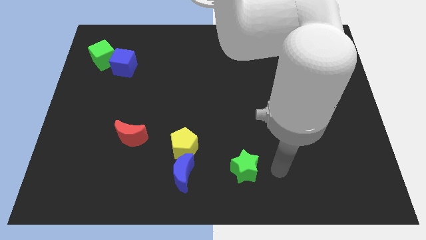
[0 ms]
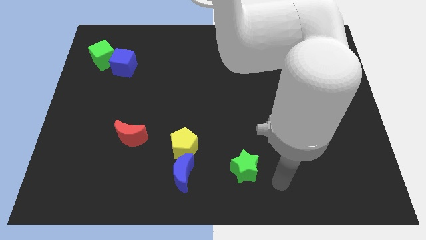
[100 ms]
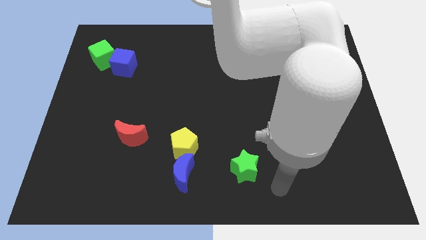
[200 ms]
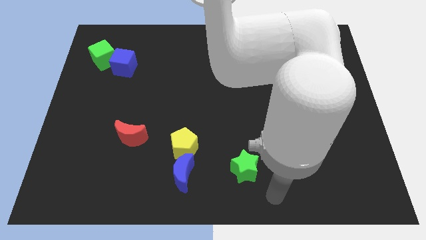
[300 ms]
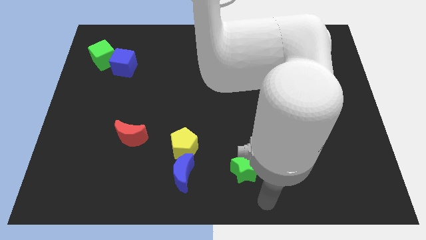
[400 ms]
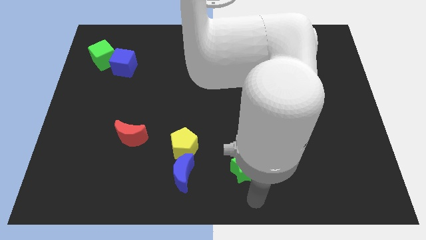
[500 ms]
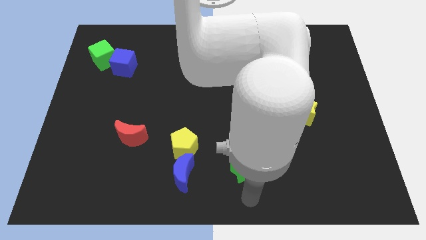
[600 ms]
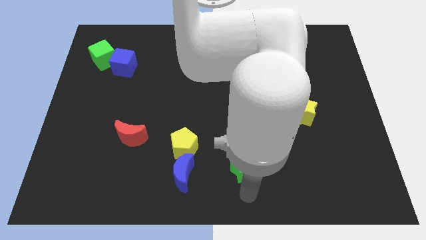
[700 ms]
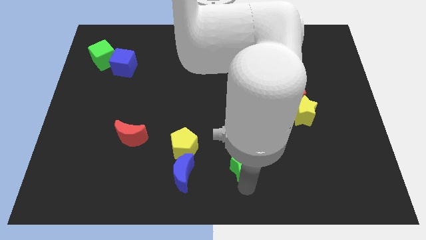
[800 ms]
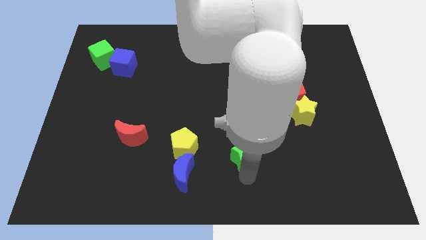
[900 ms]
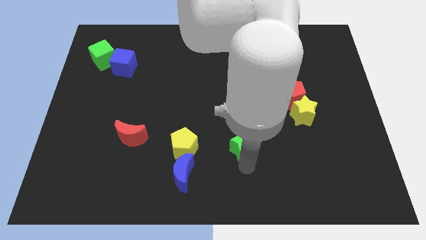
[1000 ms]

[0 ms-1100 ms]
push green star slightly up

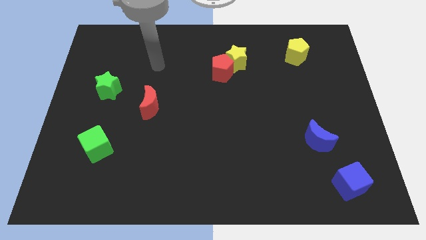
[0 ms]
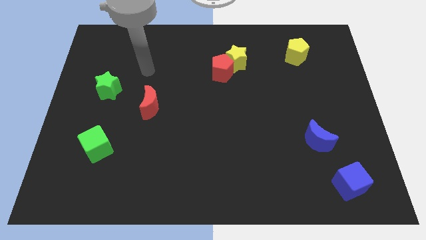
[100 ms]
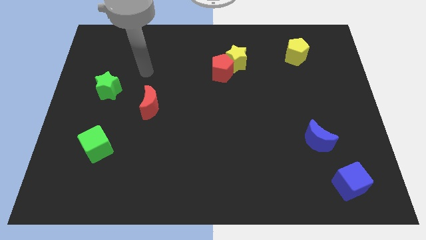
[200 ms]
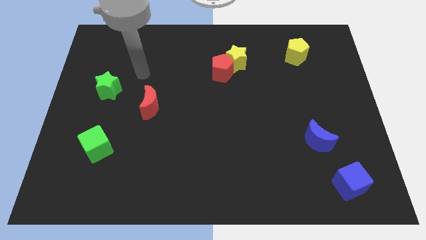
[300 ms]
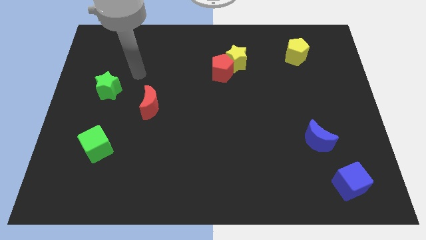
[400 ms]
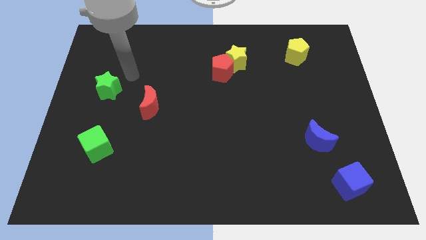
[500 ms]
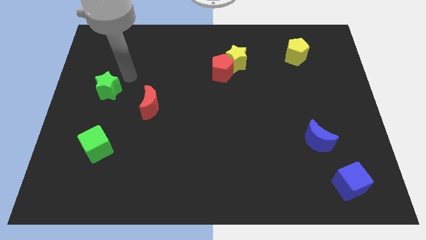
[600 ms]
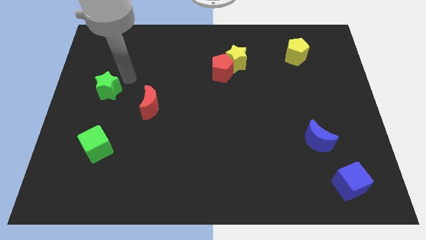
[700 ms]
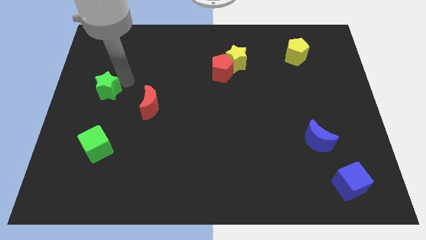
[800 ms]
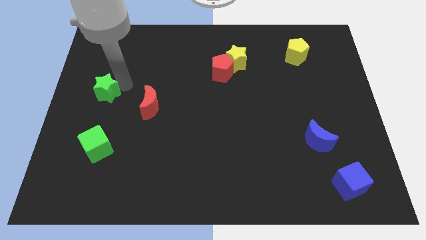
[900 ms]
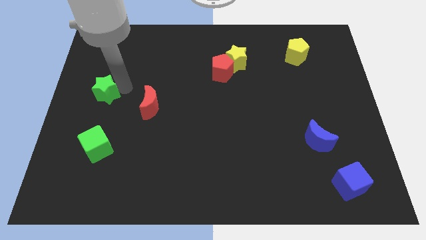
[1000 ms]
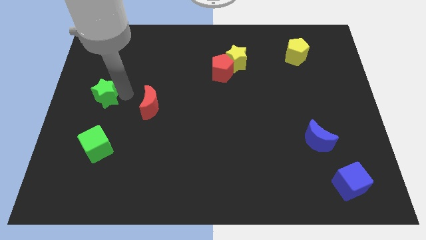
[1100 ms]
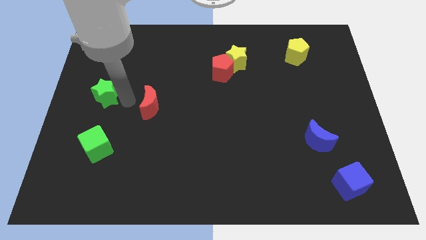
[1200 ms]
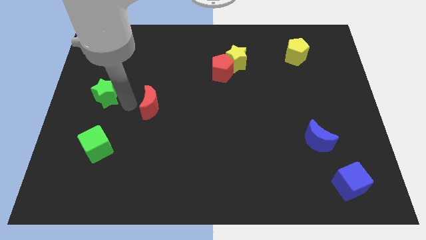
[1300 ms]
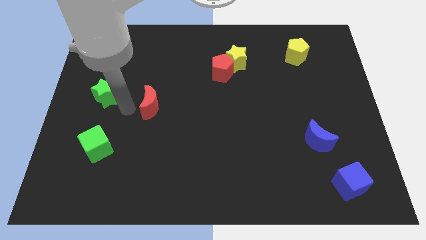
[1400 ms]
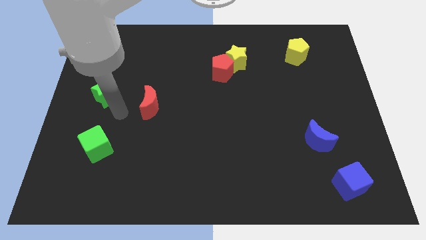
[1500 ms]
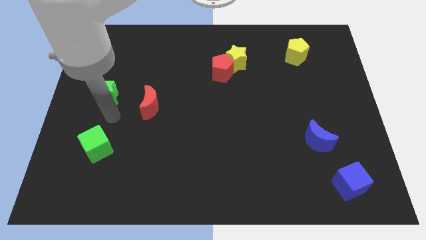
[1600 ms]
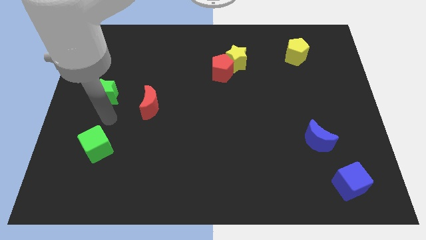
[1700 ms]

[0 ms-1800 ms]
move your arm to the bottom of the green star

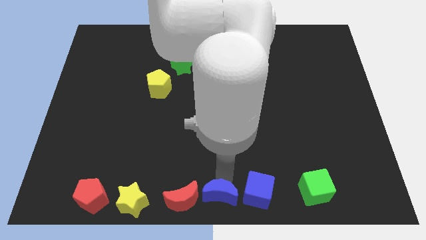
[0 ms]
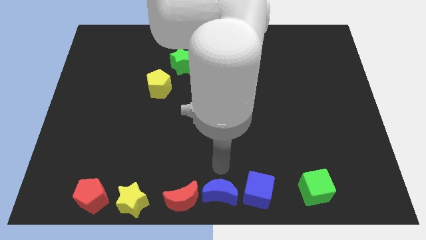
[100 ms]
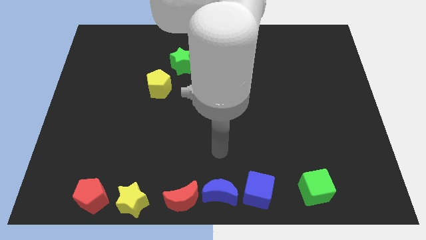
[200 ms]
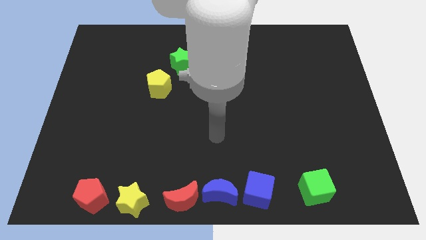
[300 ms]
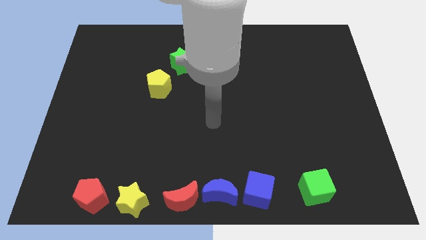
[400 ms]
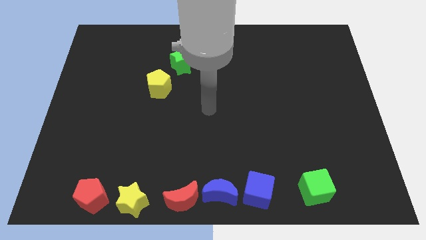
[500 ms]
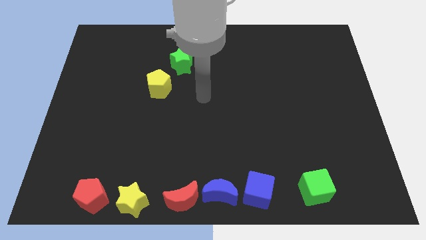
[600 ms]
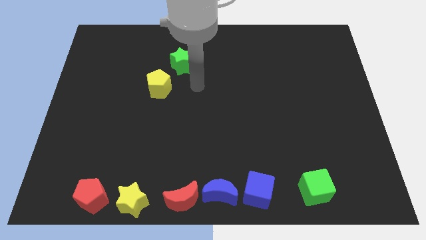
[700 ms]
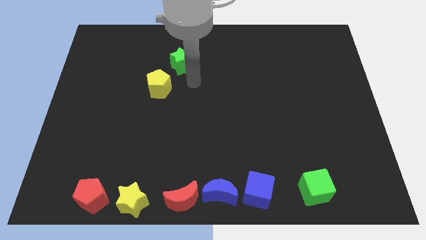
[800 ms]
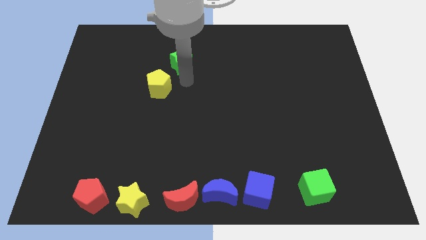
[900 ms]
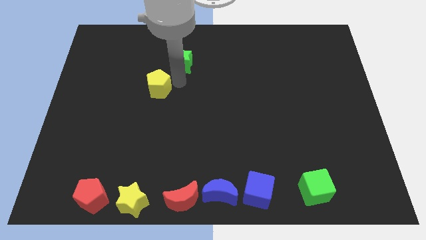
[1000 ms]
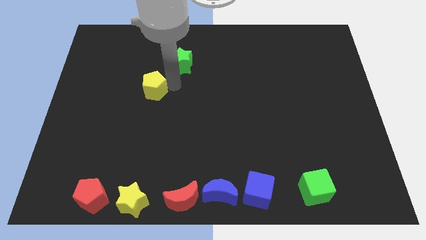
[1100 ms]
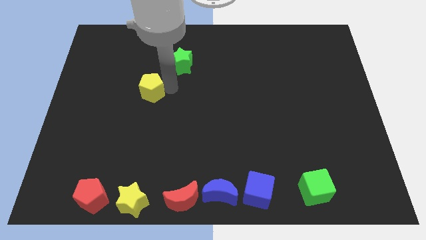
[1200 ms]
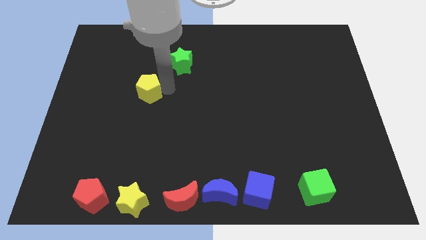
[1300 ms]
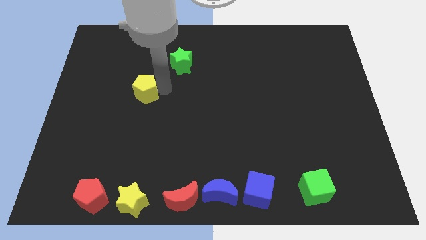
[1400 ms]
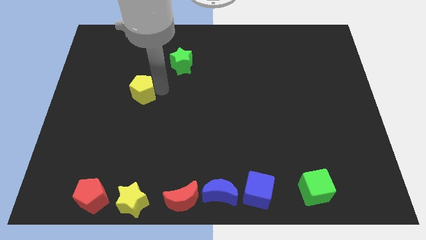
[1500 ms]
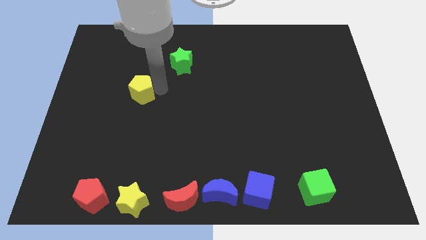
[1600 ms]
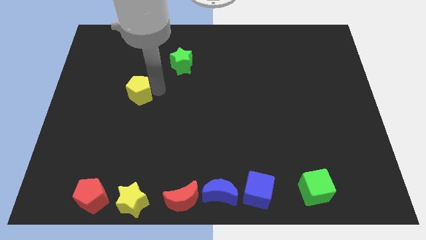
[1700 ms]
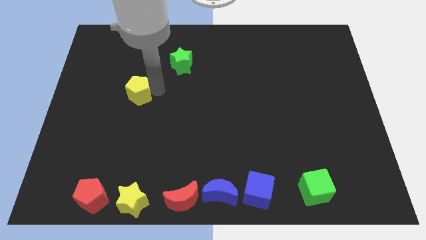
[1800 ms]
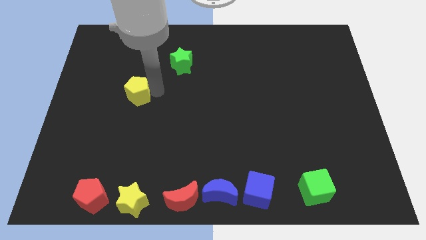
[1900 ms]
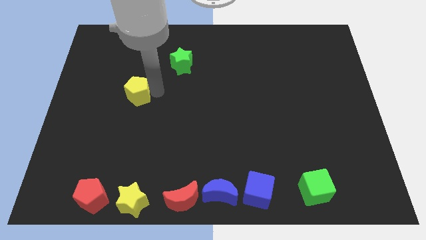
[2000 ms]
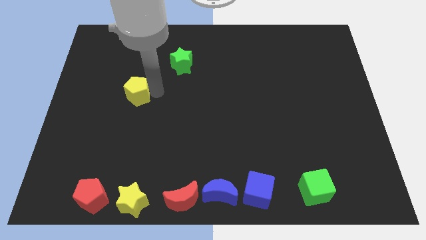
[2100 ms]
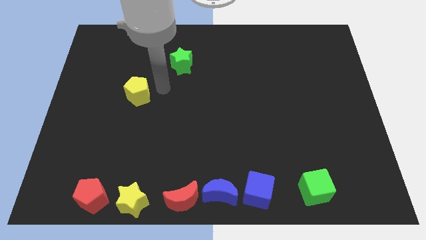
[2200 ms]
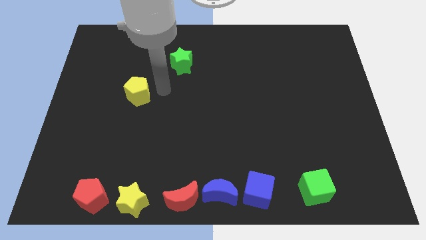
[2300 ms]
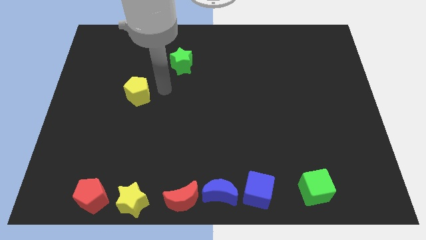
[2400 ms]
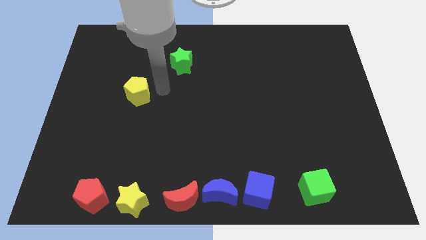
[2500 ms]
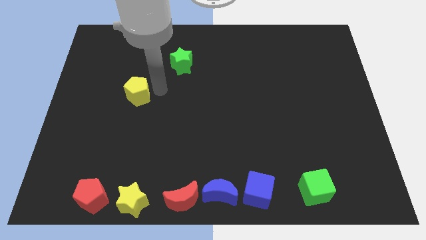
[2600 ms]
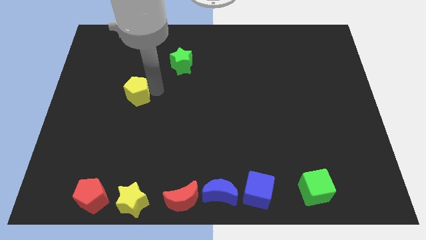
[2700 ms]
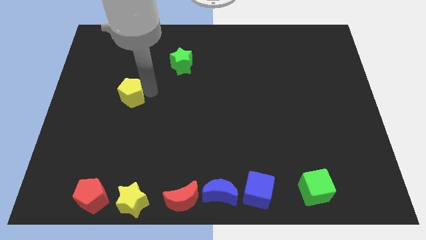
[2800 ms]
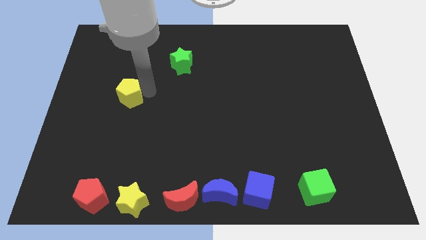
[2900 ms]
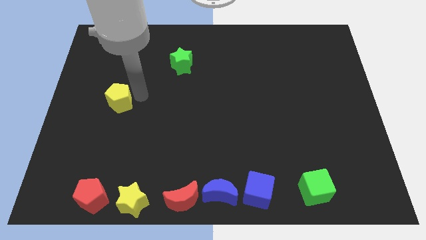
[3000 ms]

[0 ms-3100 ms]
move the yellow pentagon to the top of the yellow star

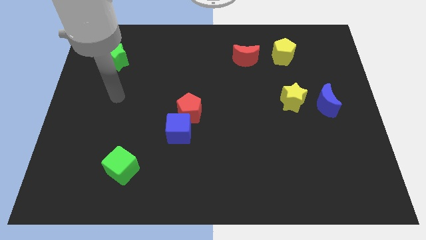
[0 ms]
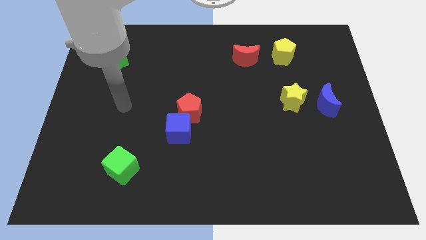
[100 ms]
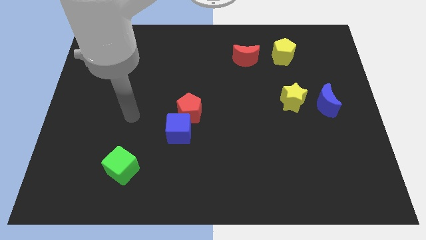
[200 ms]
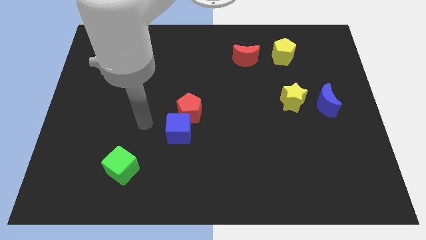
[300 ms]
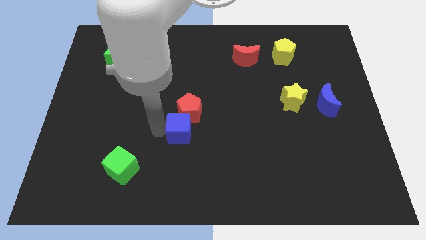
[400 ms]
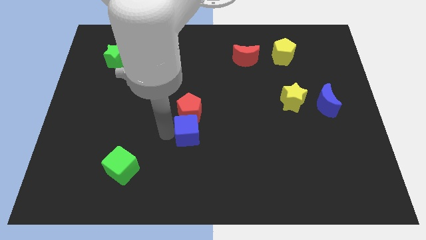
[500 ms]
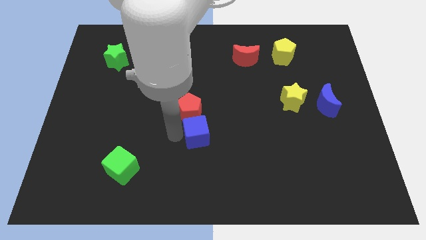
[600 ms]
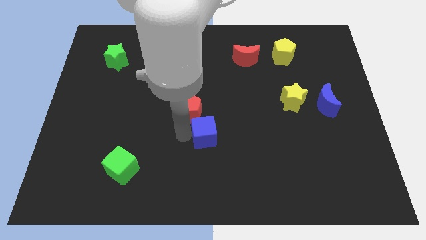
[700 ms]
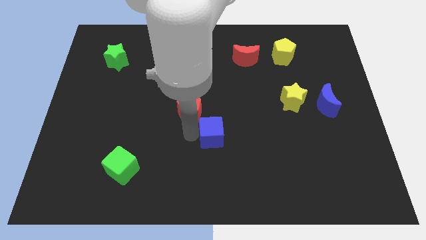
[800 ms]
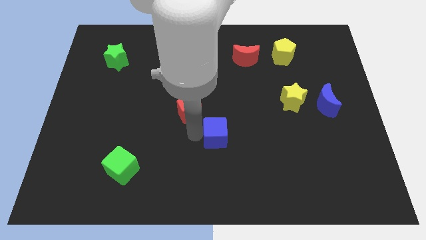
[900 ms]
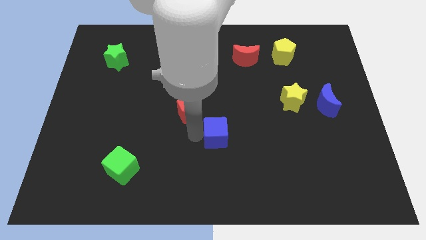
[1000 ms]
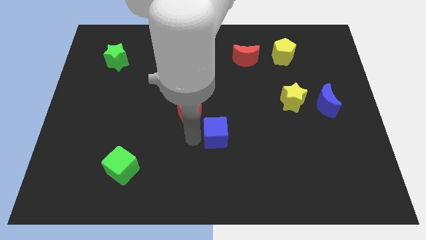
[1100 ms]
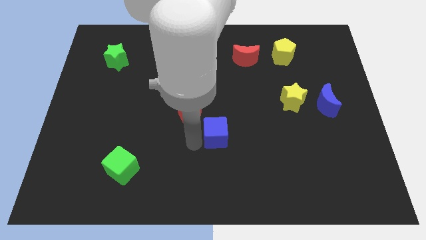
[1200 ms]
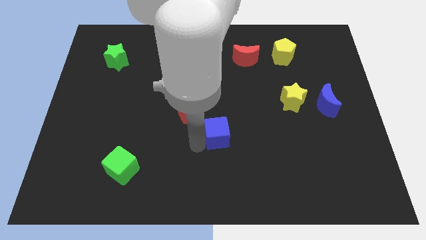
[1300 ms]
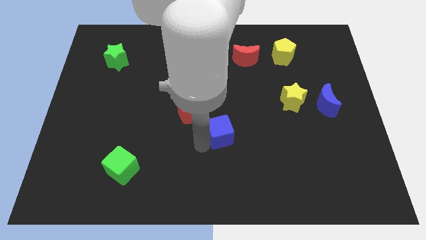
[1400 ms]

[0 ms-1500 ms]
separate the blue cube from the red pentagon
